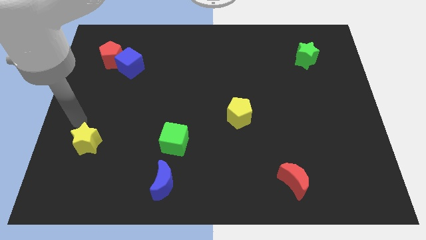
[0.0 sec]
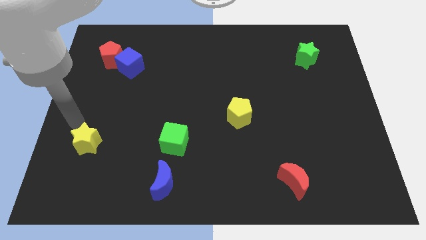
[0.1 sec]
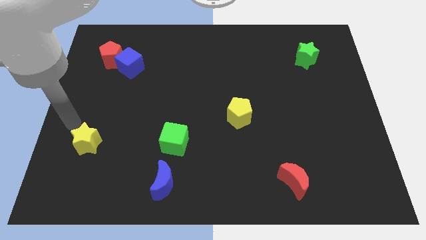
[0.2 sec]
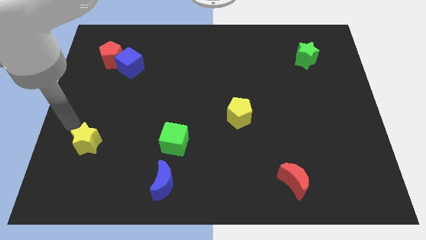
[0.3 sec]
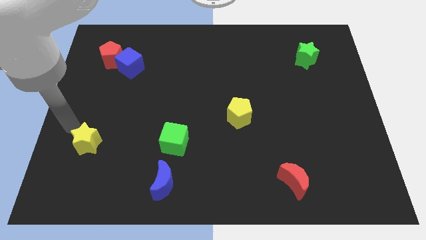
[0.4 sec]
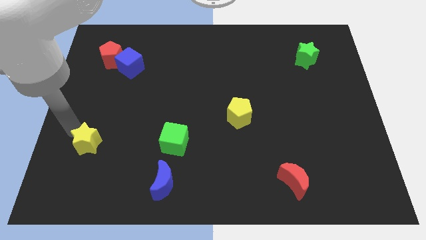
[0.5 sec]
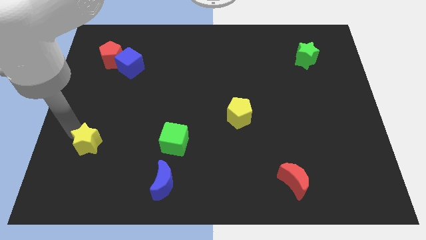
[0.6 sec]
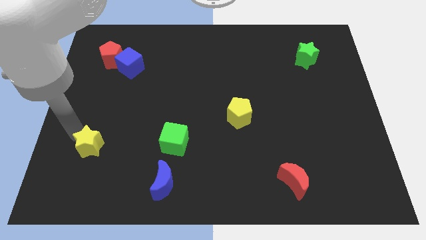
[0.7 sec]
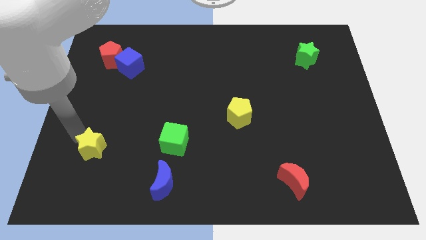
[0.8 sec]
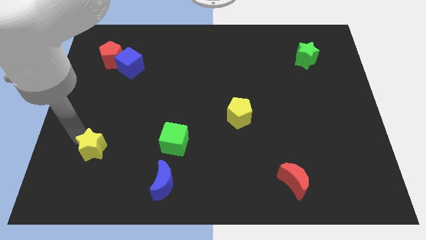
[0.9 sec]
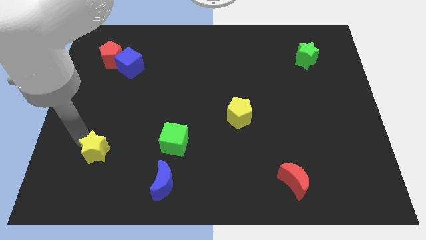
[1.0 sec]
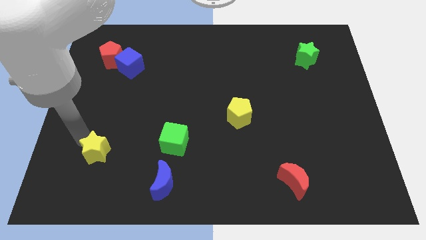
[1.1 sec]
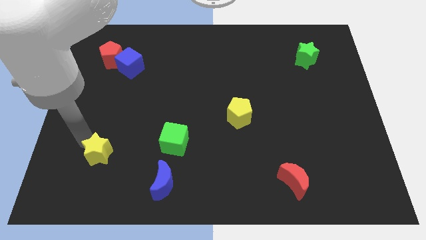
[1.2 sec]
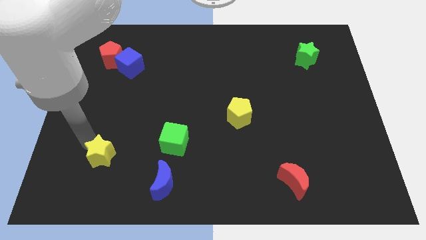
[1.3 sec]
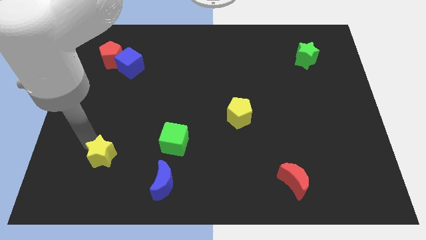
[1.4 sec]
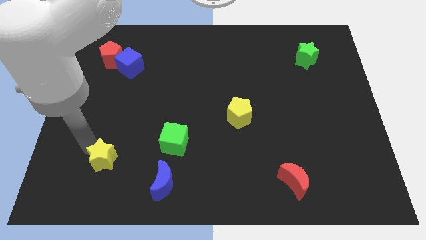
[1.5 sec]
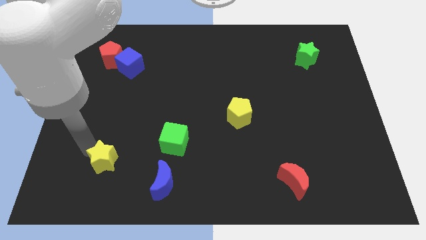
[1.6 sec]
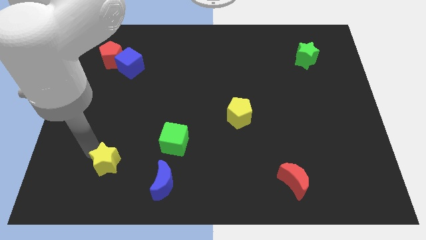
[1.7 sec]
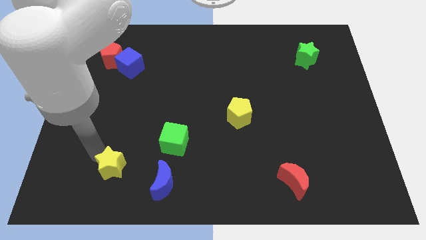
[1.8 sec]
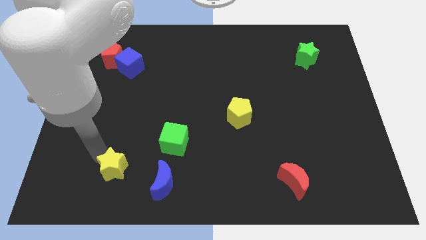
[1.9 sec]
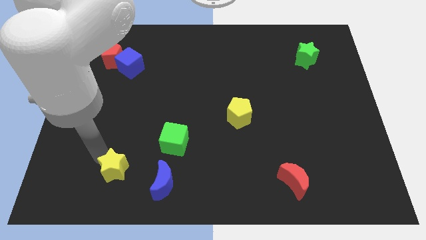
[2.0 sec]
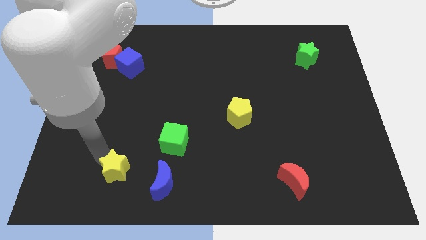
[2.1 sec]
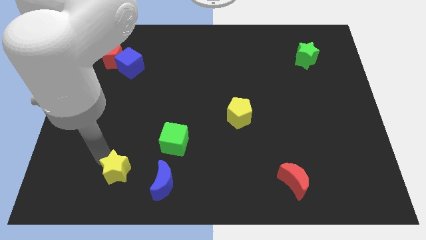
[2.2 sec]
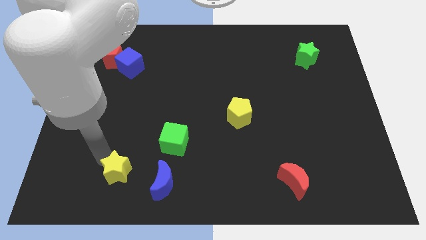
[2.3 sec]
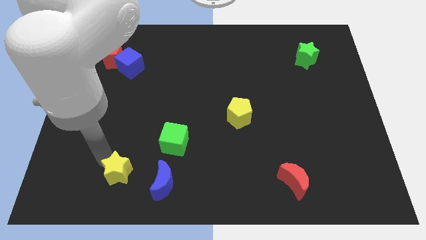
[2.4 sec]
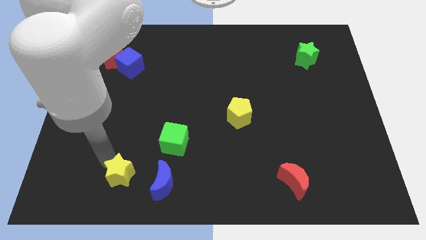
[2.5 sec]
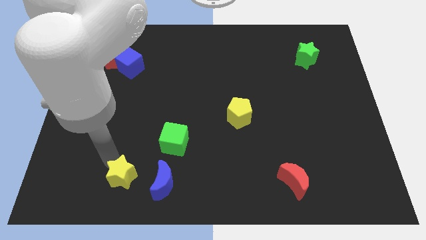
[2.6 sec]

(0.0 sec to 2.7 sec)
move the yellow star to the left of the blue moon

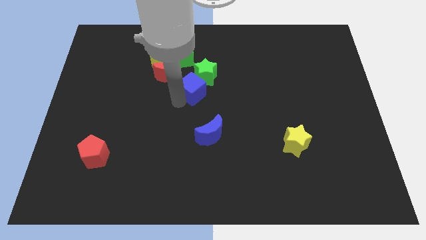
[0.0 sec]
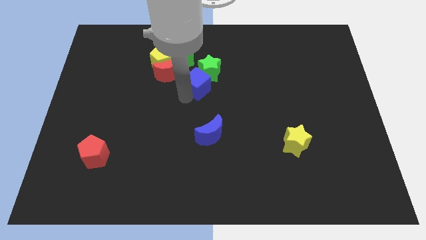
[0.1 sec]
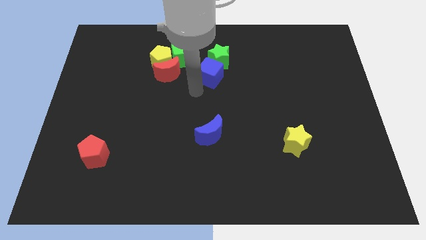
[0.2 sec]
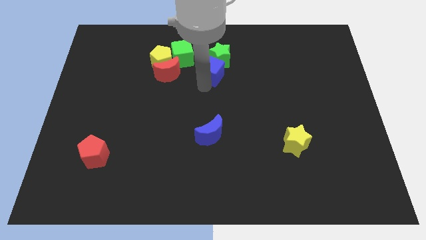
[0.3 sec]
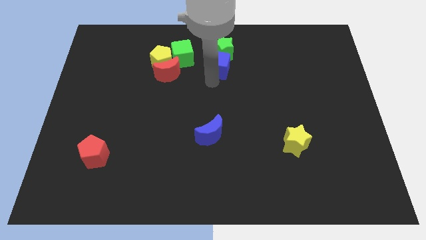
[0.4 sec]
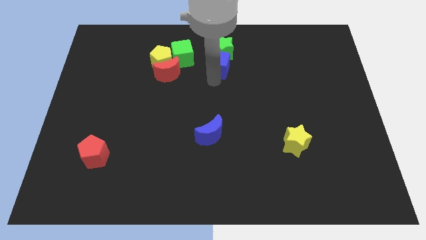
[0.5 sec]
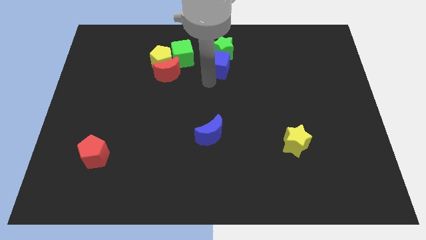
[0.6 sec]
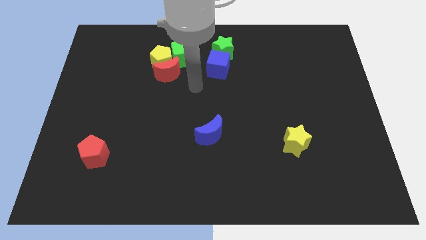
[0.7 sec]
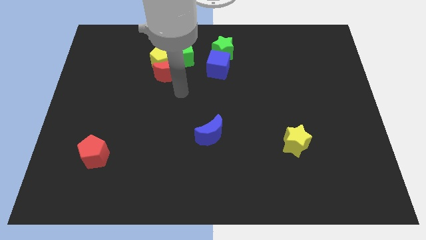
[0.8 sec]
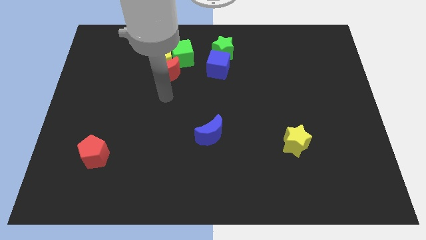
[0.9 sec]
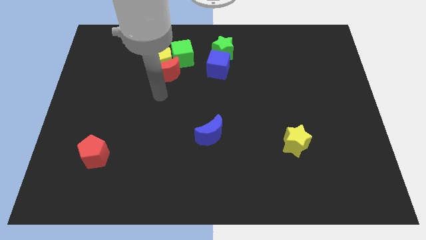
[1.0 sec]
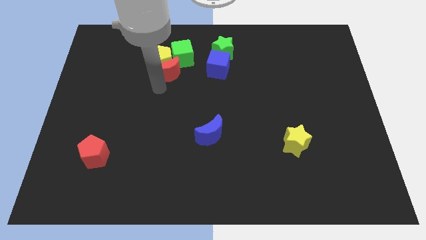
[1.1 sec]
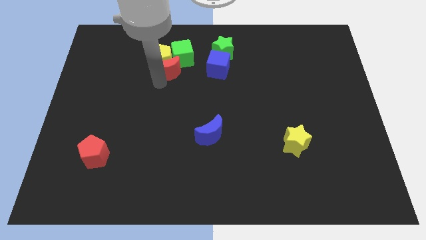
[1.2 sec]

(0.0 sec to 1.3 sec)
move the blue cube into the green star

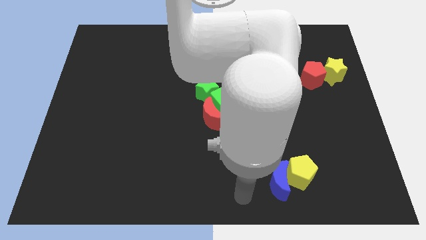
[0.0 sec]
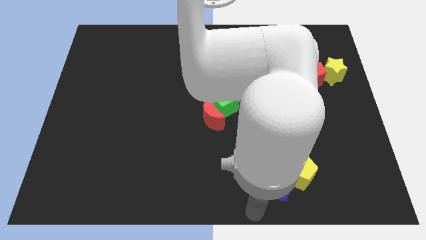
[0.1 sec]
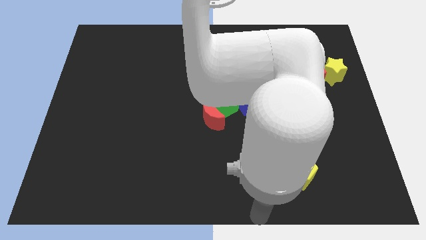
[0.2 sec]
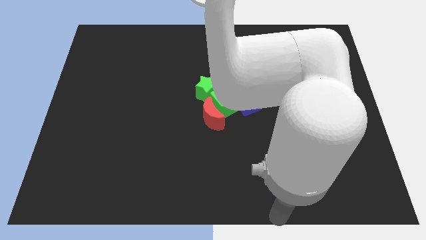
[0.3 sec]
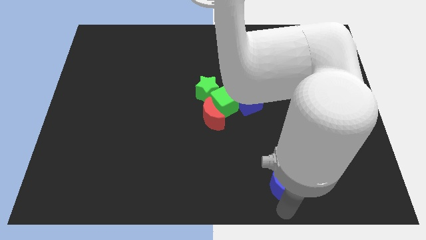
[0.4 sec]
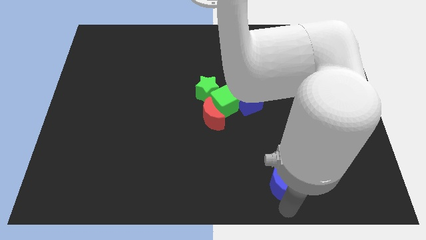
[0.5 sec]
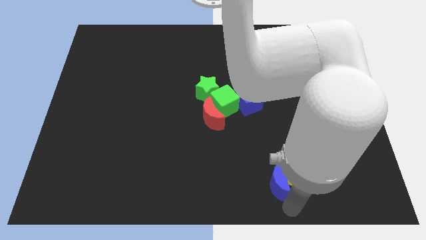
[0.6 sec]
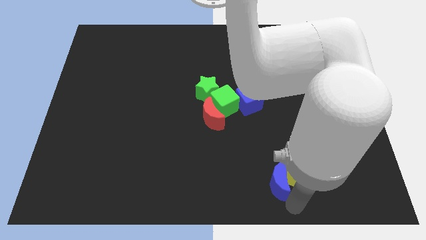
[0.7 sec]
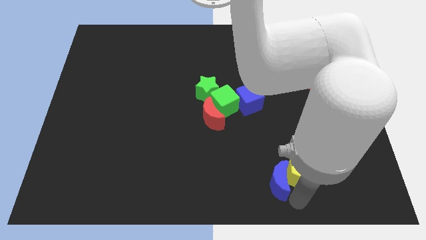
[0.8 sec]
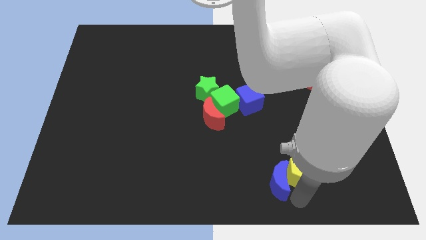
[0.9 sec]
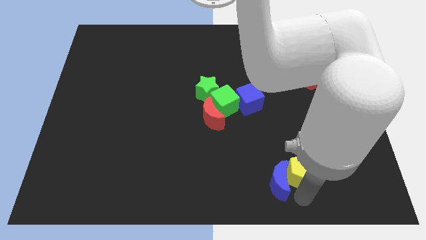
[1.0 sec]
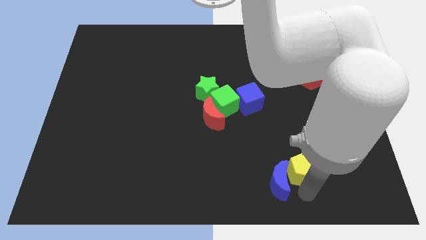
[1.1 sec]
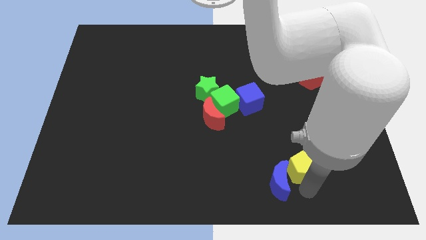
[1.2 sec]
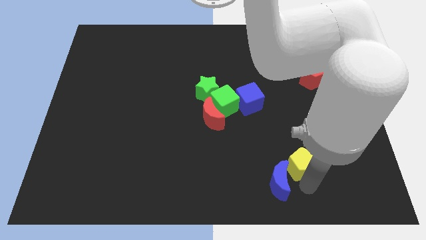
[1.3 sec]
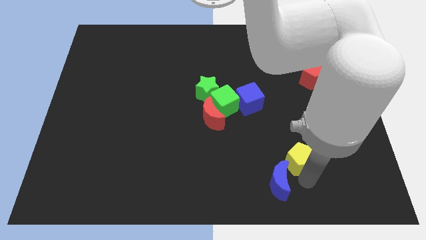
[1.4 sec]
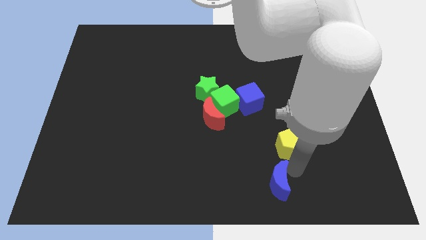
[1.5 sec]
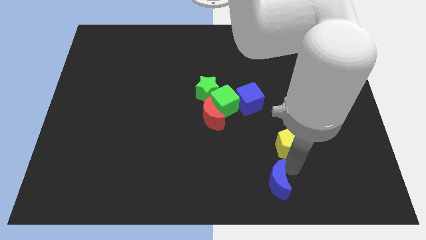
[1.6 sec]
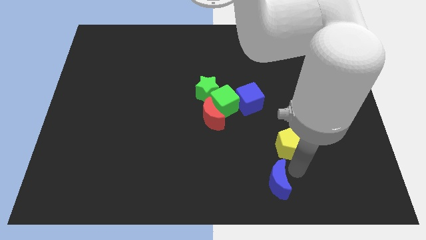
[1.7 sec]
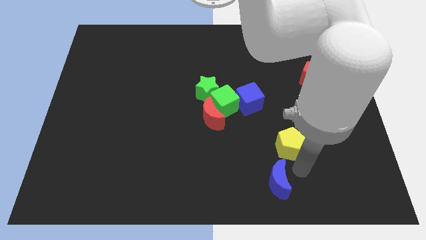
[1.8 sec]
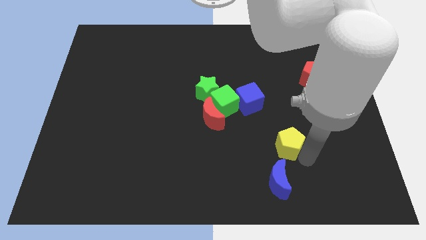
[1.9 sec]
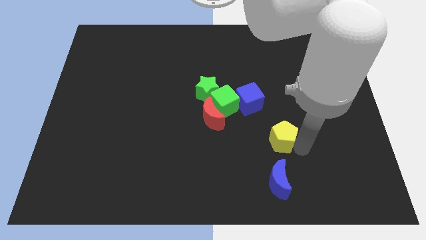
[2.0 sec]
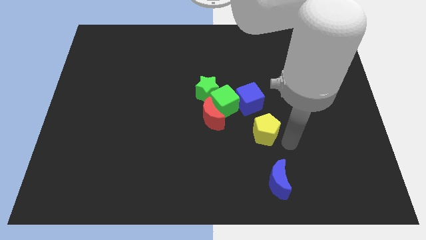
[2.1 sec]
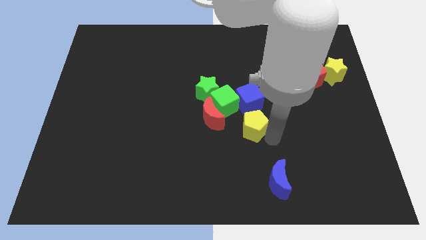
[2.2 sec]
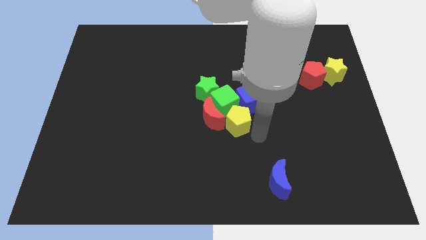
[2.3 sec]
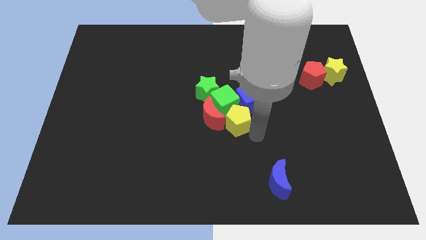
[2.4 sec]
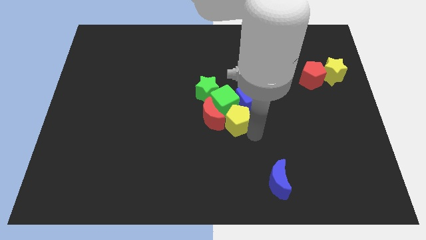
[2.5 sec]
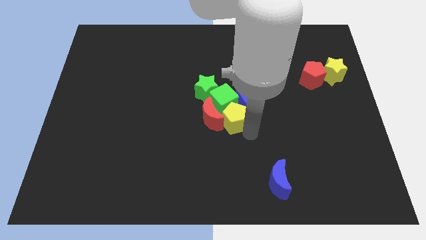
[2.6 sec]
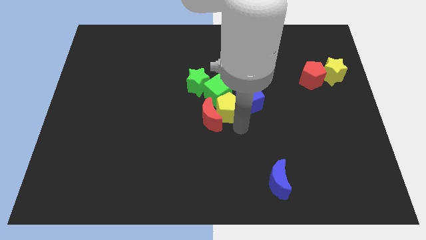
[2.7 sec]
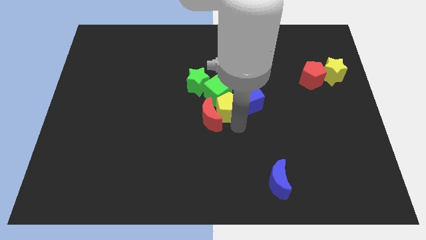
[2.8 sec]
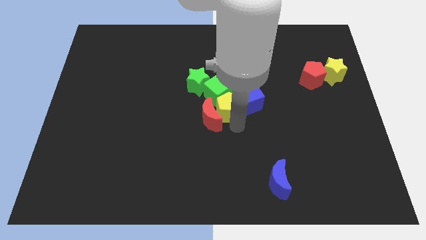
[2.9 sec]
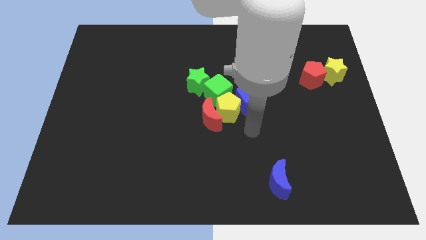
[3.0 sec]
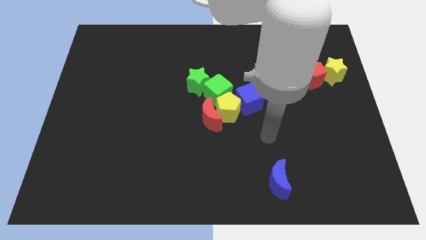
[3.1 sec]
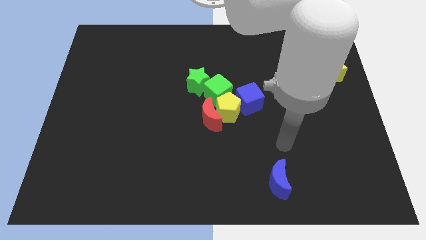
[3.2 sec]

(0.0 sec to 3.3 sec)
place yellow pentagon between blue cube and red crescent

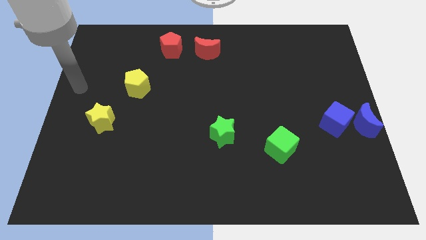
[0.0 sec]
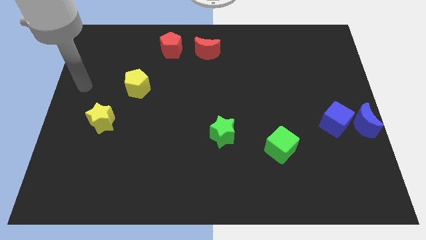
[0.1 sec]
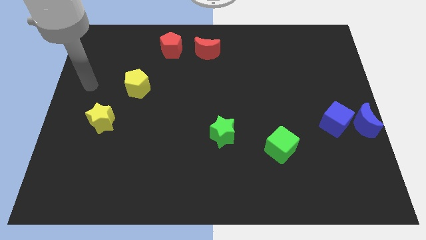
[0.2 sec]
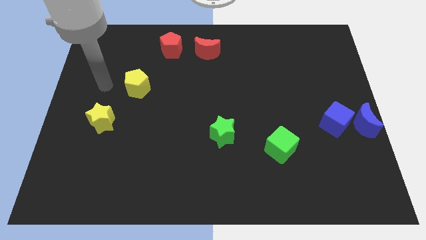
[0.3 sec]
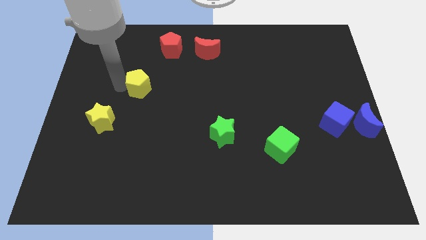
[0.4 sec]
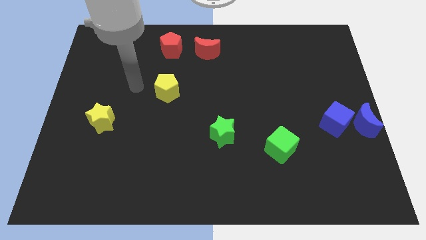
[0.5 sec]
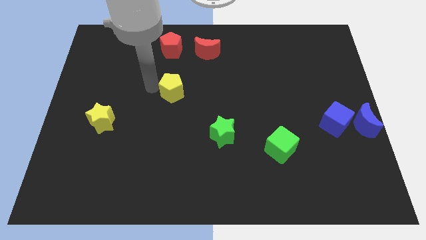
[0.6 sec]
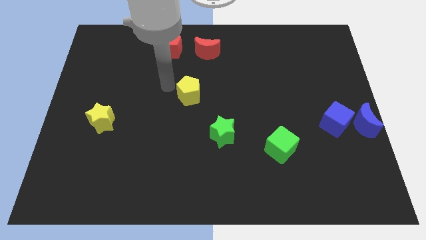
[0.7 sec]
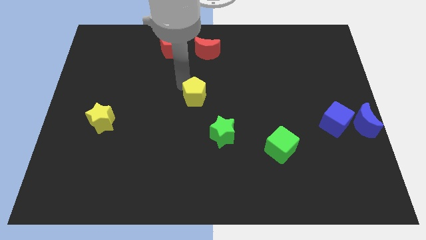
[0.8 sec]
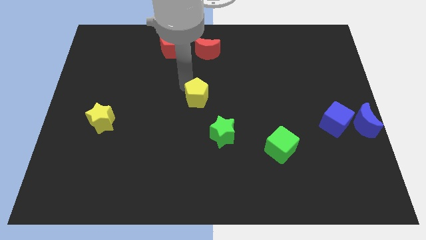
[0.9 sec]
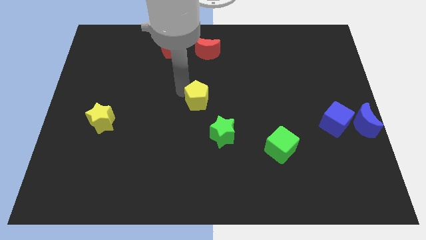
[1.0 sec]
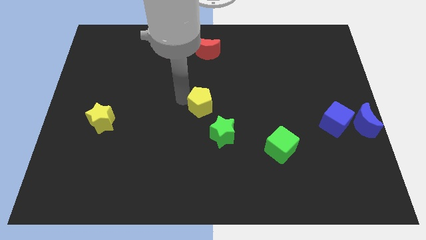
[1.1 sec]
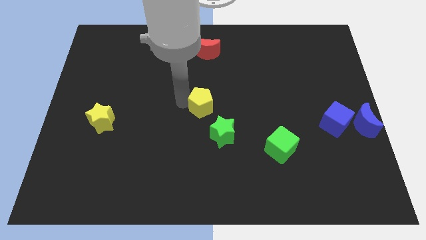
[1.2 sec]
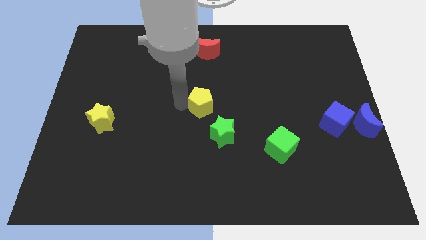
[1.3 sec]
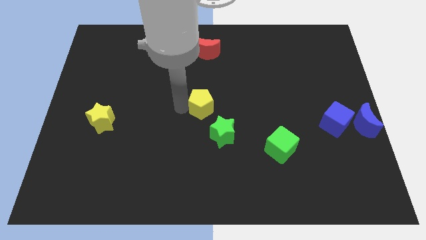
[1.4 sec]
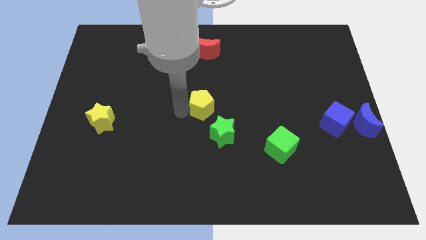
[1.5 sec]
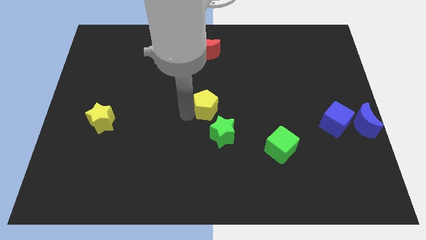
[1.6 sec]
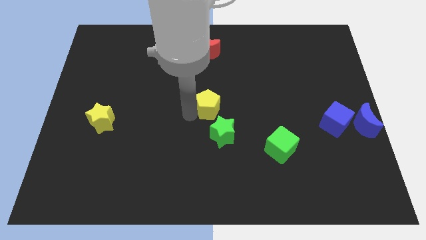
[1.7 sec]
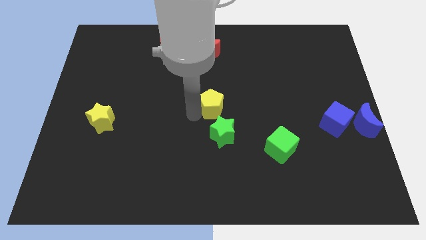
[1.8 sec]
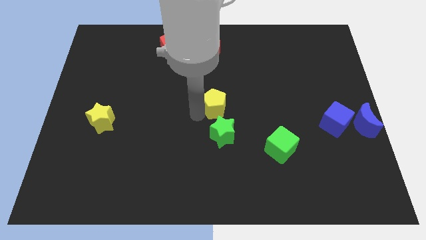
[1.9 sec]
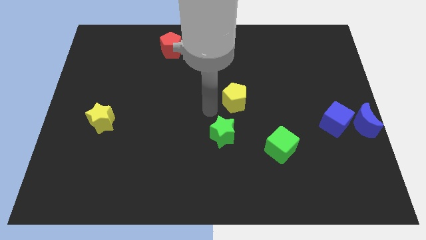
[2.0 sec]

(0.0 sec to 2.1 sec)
place the yellow pentagon above the green star
